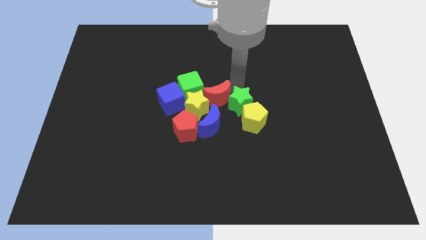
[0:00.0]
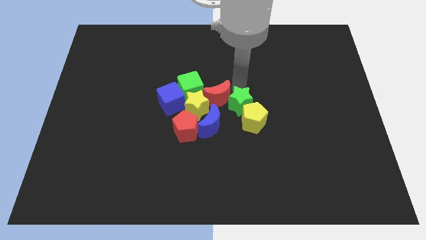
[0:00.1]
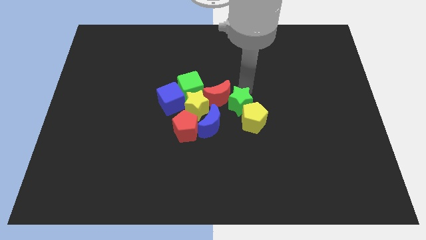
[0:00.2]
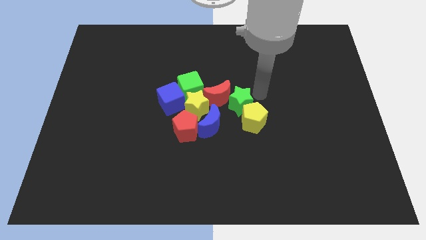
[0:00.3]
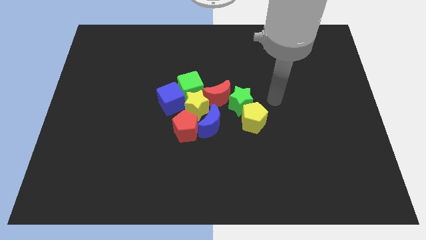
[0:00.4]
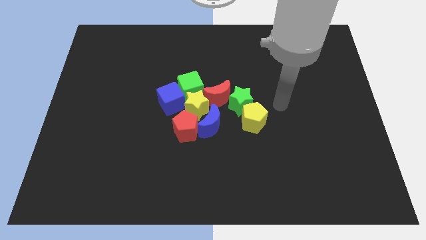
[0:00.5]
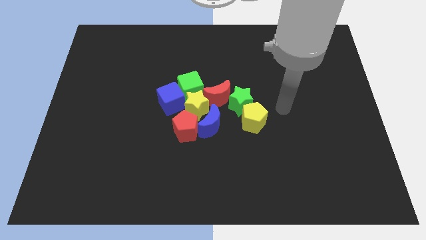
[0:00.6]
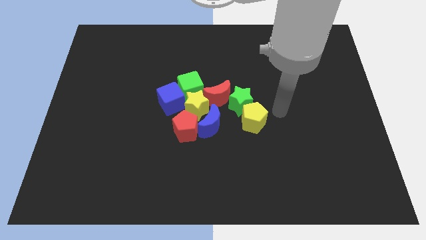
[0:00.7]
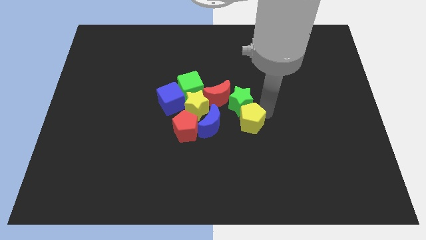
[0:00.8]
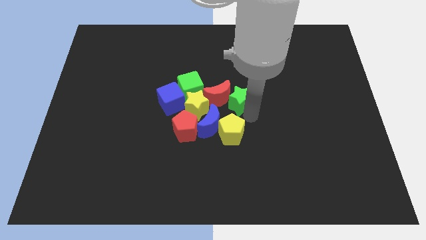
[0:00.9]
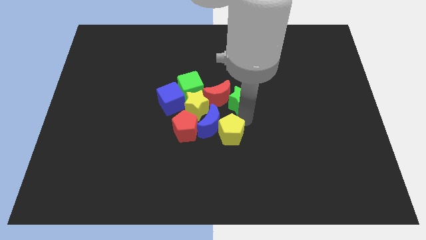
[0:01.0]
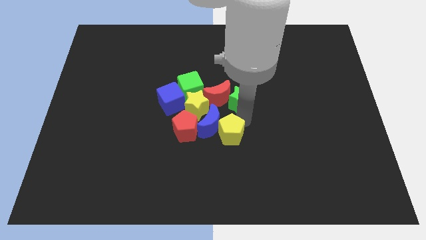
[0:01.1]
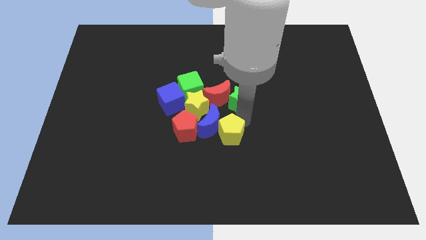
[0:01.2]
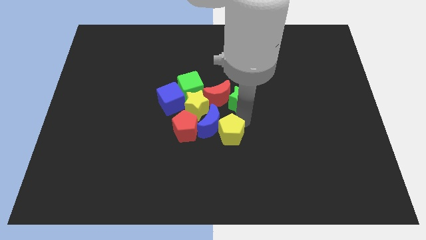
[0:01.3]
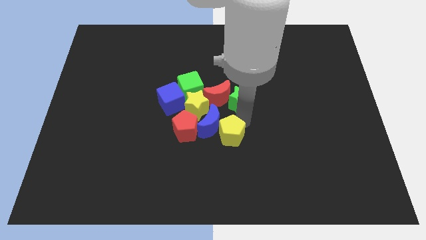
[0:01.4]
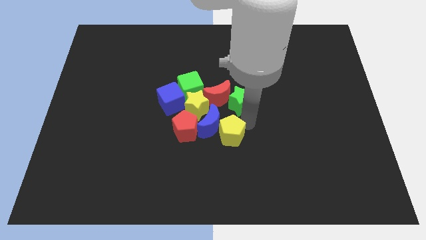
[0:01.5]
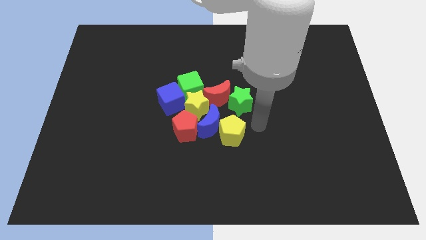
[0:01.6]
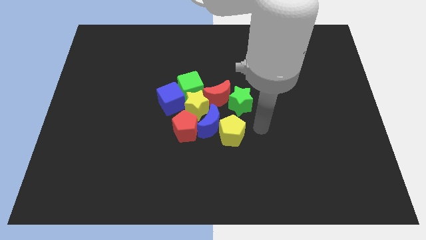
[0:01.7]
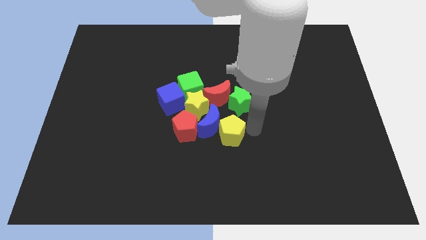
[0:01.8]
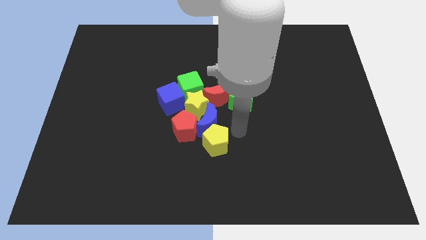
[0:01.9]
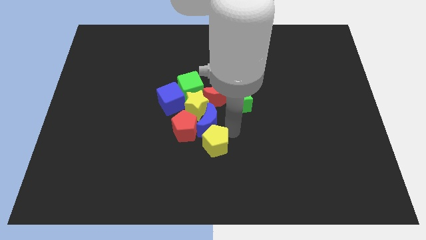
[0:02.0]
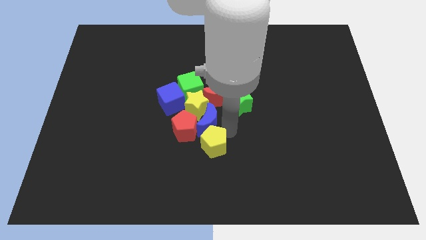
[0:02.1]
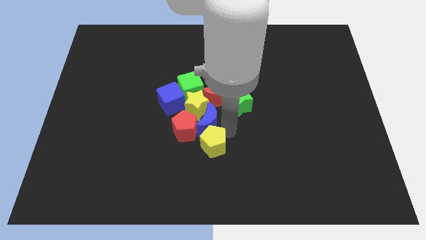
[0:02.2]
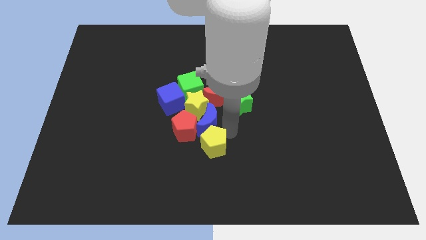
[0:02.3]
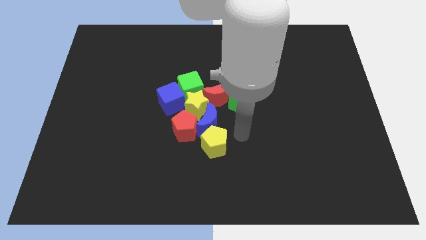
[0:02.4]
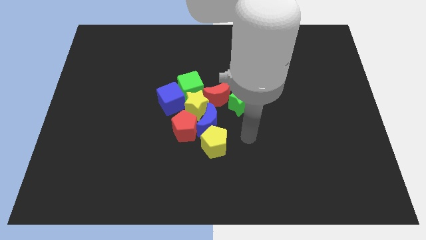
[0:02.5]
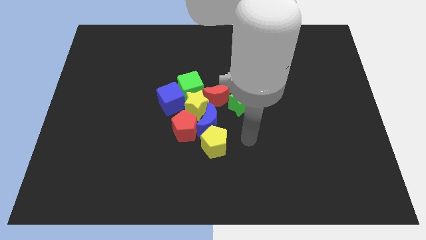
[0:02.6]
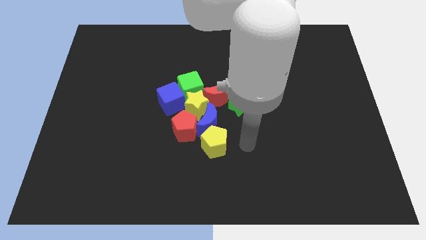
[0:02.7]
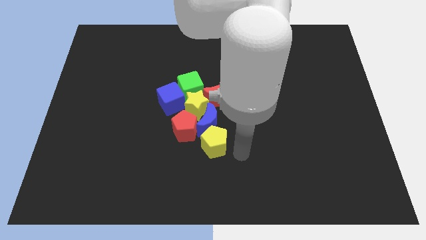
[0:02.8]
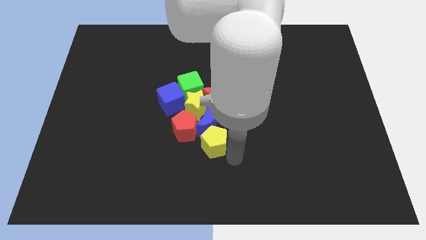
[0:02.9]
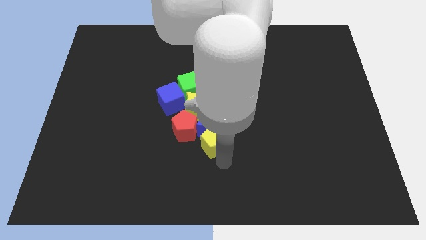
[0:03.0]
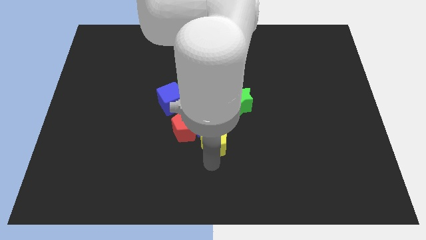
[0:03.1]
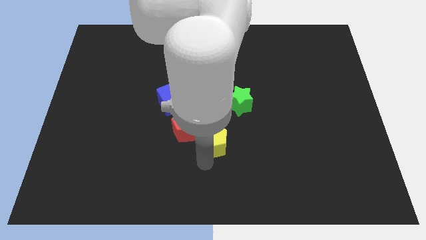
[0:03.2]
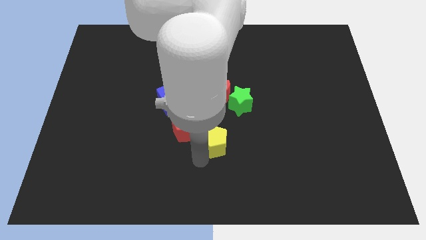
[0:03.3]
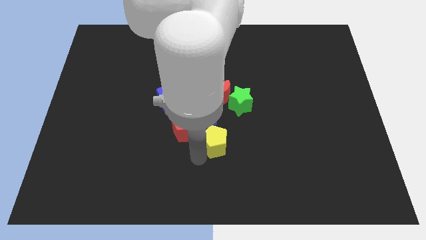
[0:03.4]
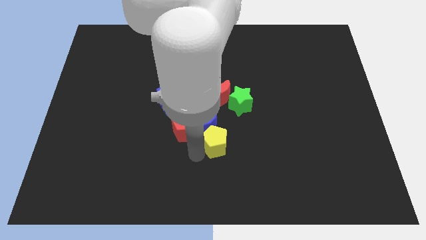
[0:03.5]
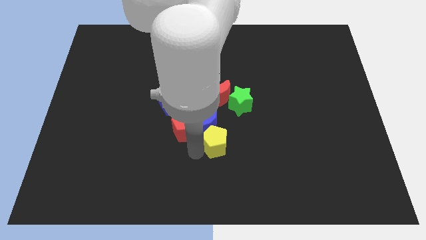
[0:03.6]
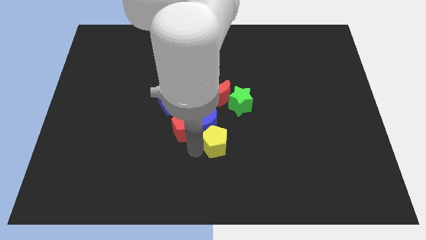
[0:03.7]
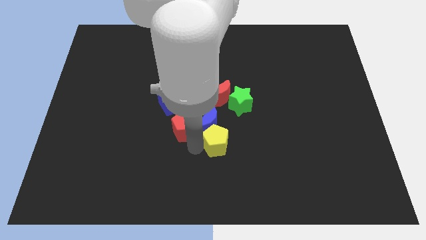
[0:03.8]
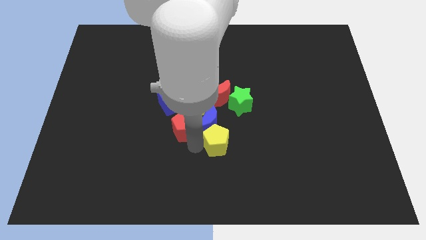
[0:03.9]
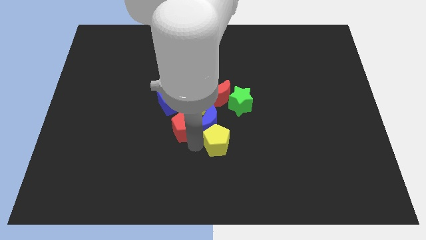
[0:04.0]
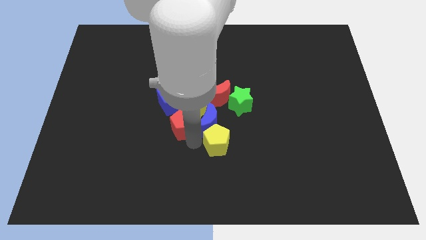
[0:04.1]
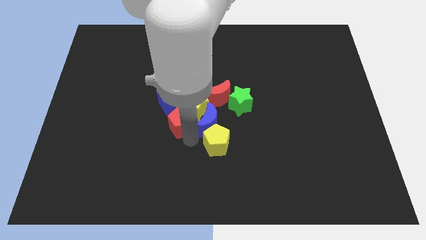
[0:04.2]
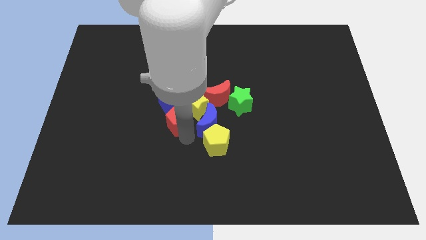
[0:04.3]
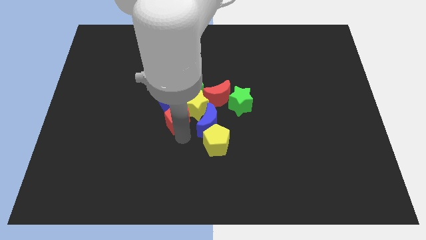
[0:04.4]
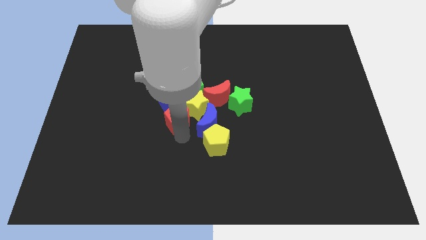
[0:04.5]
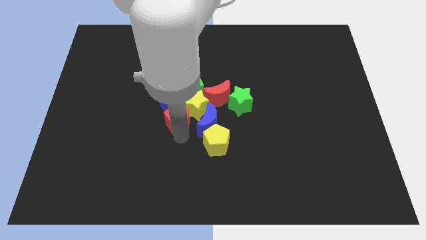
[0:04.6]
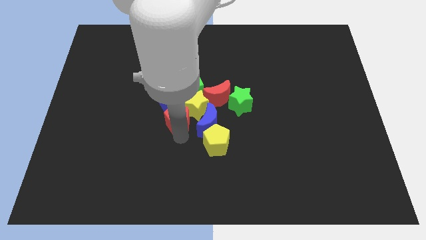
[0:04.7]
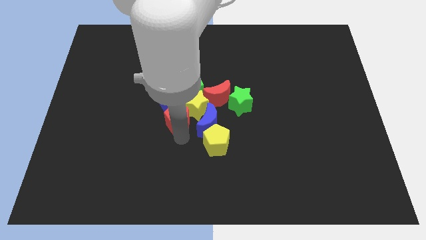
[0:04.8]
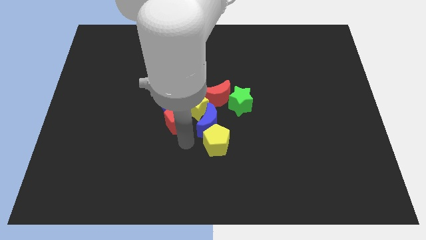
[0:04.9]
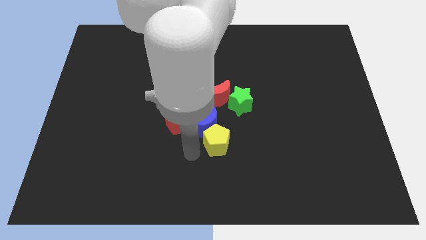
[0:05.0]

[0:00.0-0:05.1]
place the yellow pentagon below the blue crescent

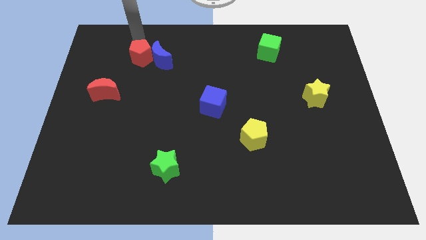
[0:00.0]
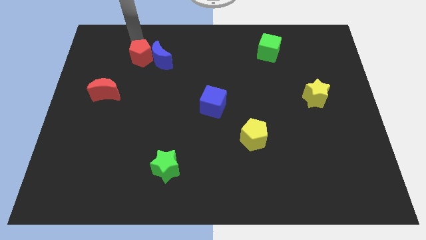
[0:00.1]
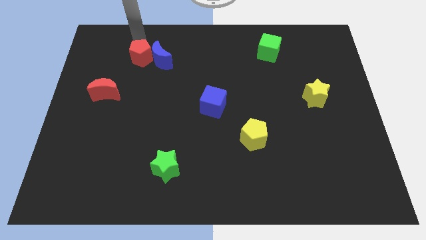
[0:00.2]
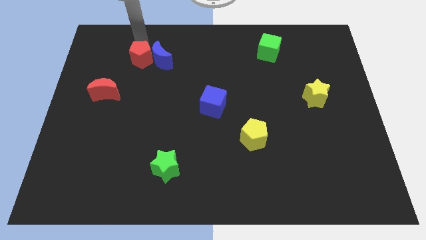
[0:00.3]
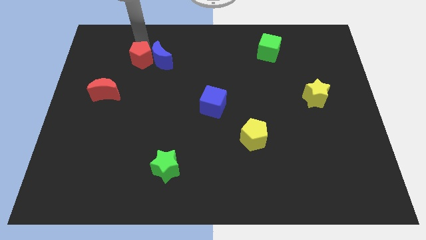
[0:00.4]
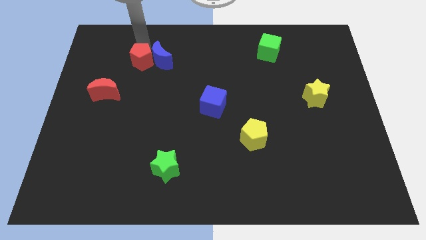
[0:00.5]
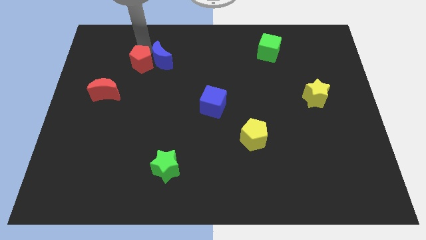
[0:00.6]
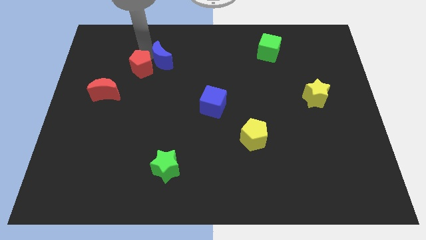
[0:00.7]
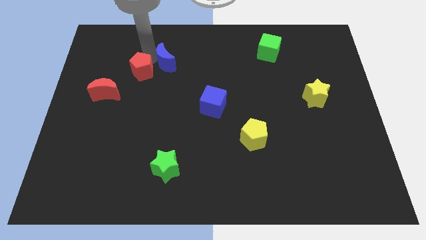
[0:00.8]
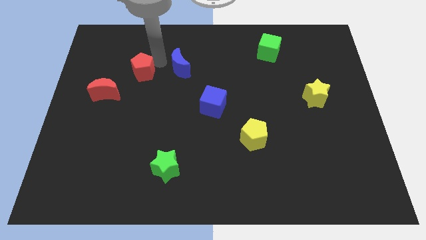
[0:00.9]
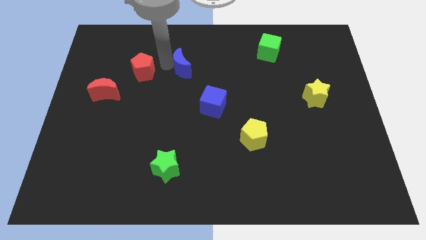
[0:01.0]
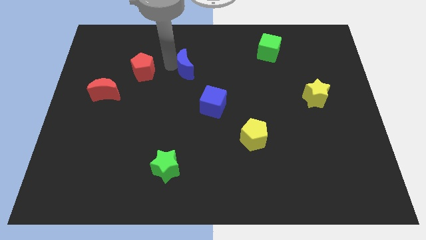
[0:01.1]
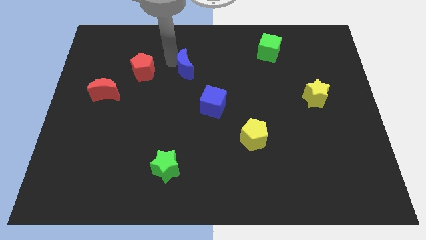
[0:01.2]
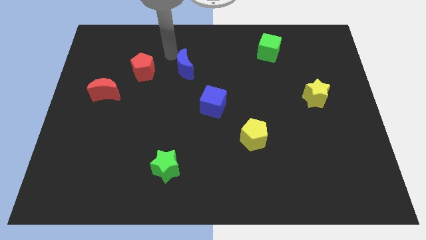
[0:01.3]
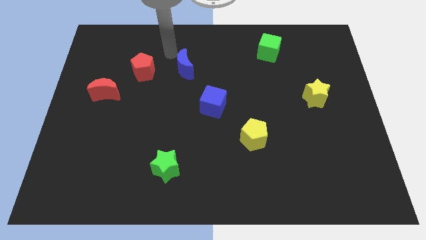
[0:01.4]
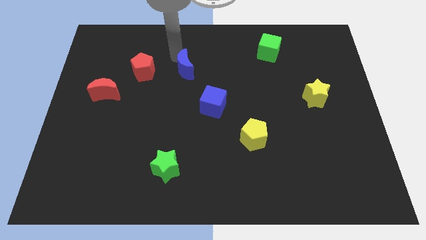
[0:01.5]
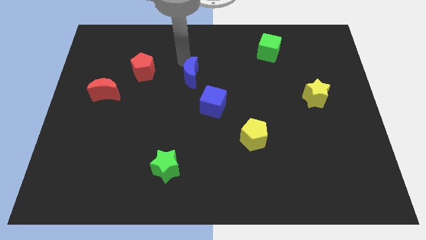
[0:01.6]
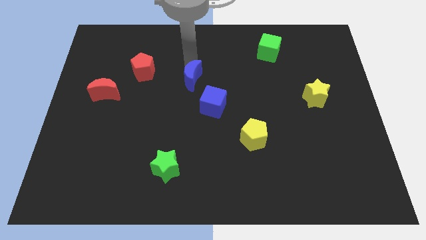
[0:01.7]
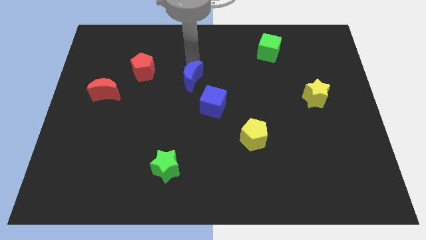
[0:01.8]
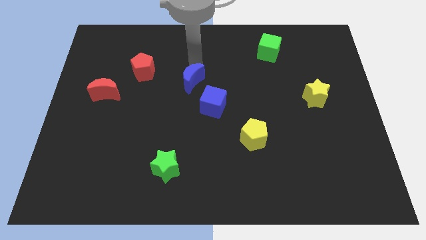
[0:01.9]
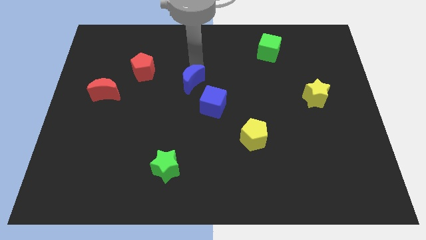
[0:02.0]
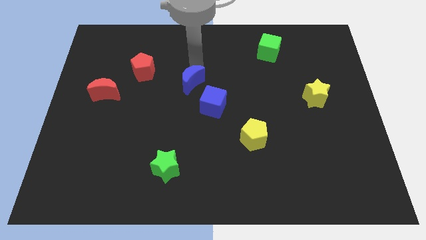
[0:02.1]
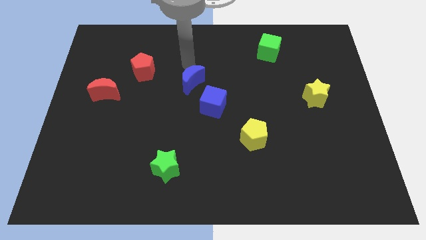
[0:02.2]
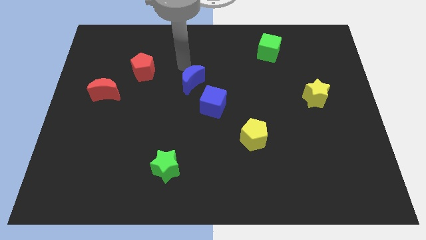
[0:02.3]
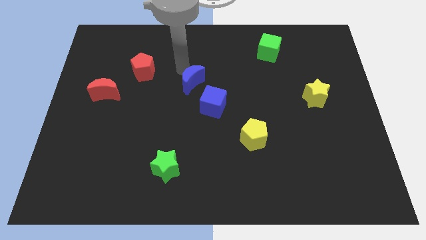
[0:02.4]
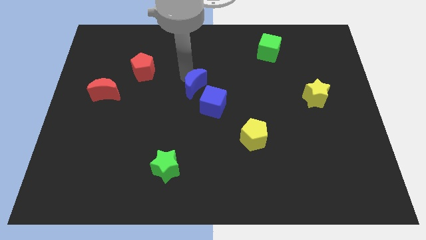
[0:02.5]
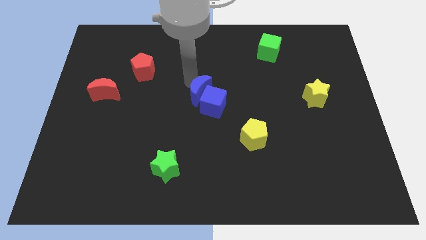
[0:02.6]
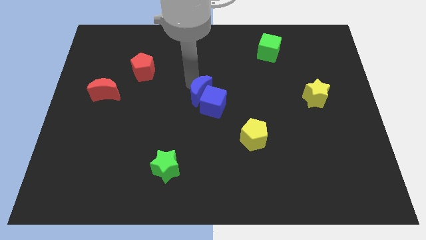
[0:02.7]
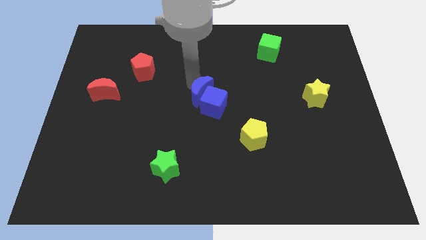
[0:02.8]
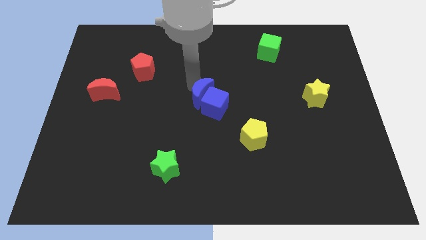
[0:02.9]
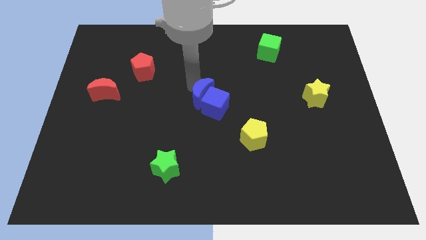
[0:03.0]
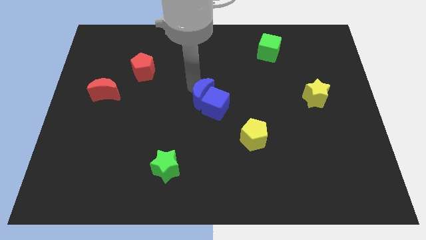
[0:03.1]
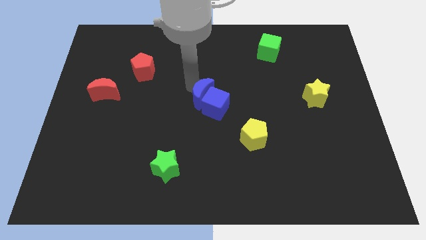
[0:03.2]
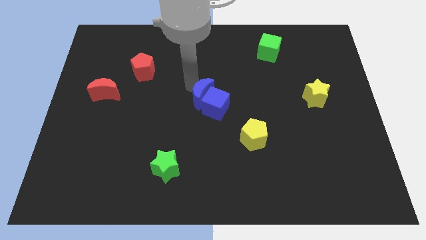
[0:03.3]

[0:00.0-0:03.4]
group up the blue blocks at the center

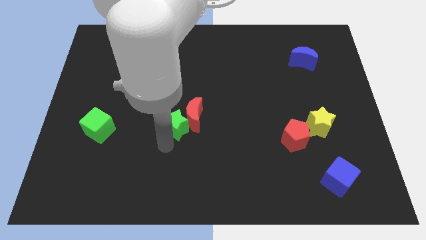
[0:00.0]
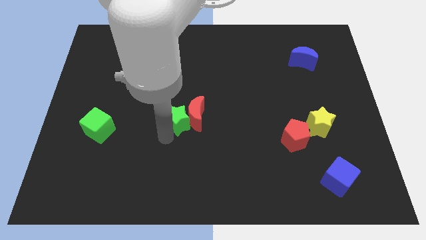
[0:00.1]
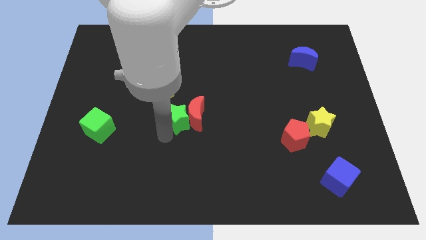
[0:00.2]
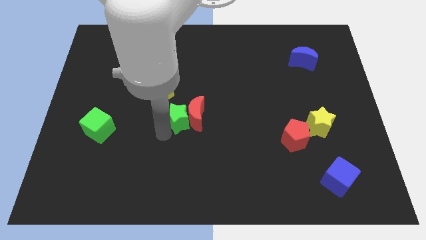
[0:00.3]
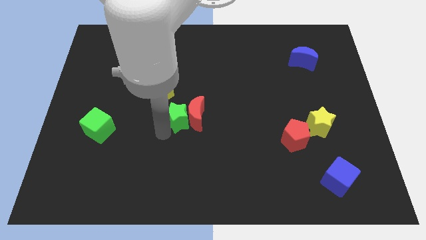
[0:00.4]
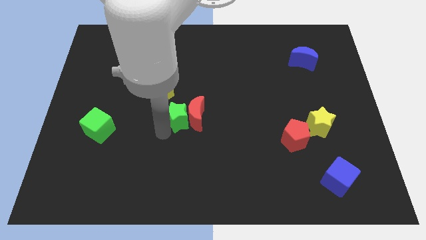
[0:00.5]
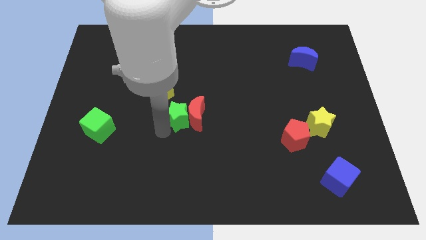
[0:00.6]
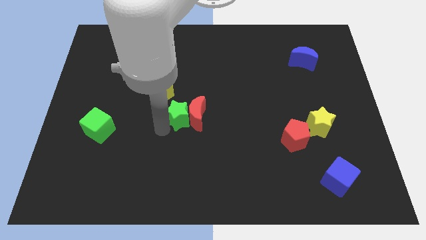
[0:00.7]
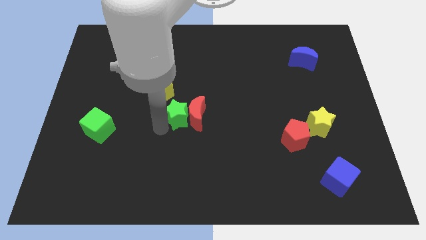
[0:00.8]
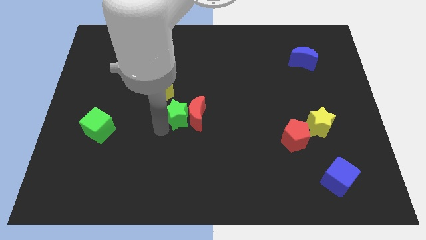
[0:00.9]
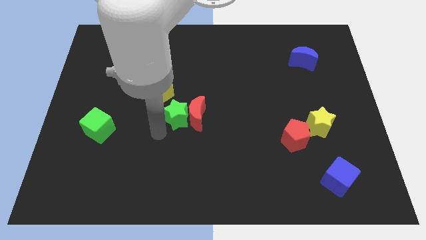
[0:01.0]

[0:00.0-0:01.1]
push the green star slightly to the top
